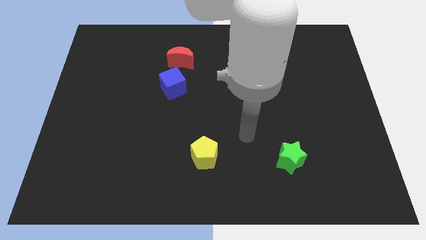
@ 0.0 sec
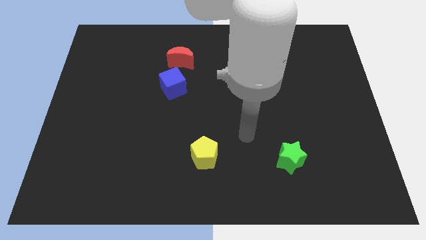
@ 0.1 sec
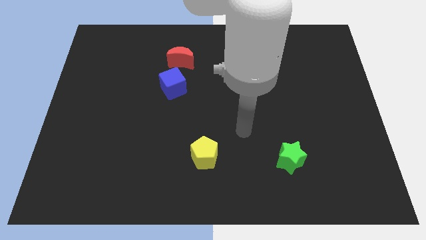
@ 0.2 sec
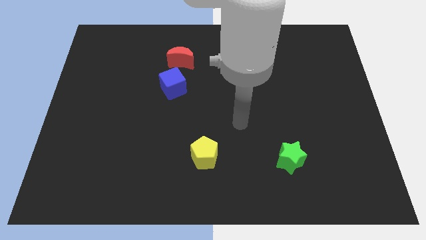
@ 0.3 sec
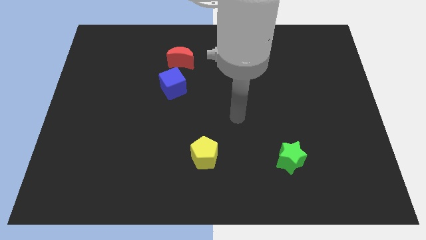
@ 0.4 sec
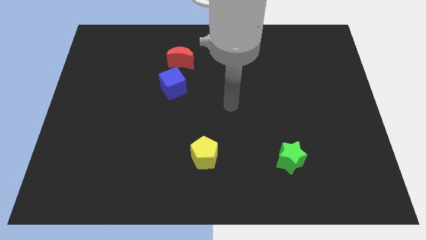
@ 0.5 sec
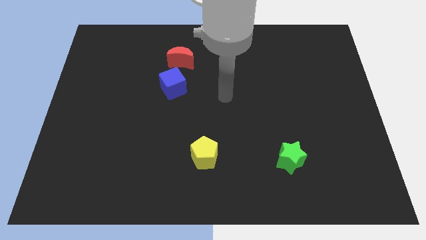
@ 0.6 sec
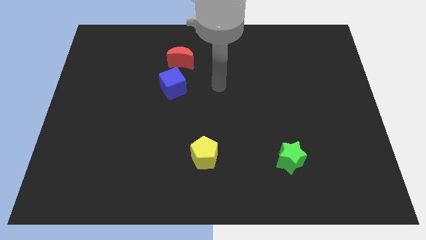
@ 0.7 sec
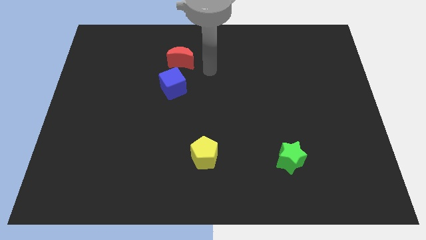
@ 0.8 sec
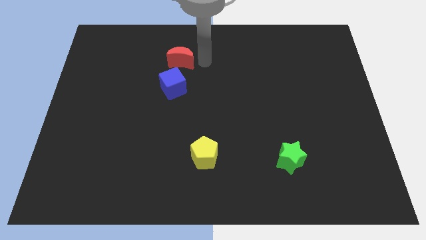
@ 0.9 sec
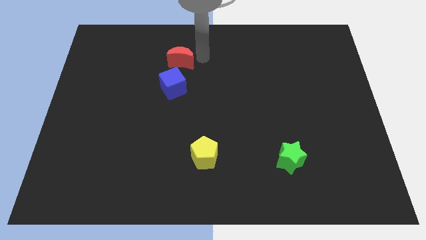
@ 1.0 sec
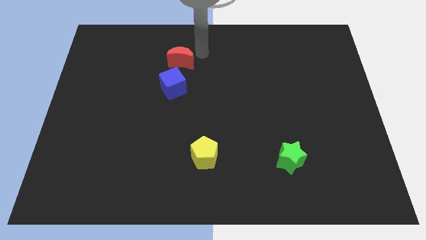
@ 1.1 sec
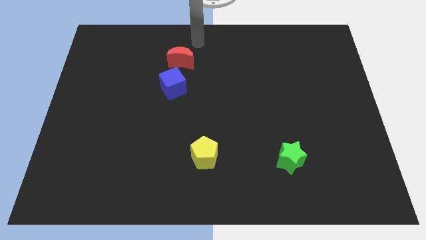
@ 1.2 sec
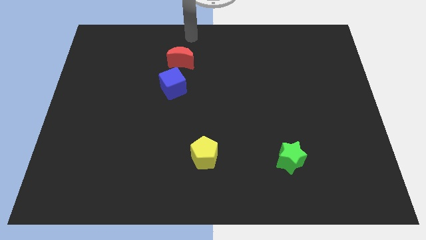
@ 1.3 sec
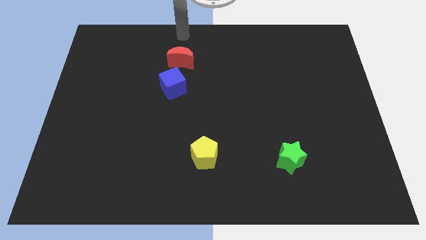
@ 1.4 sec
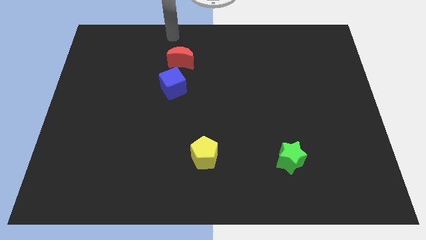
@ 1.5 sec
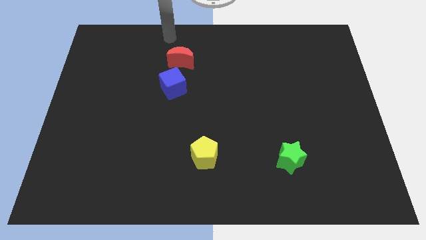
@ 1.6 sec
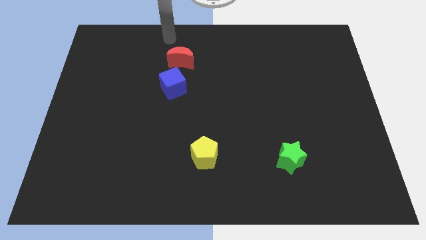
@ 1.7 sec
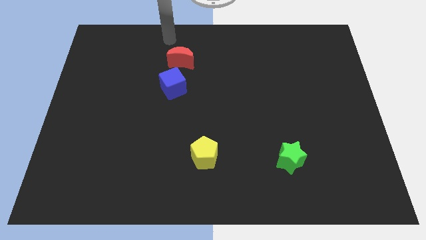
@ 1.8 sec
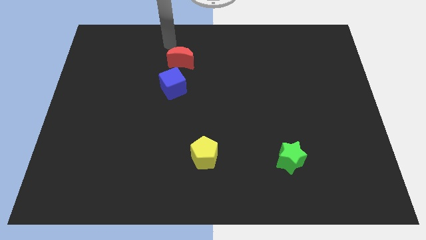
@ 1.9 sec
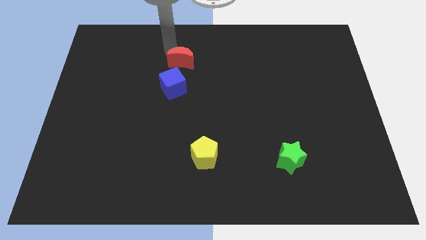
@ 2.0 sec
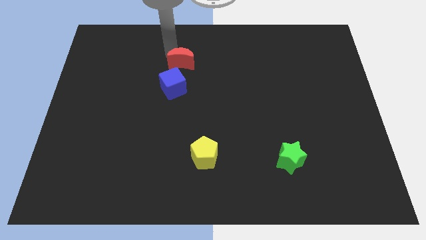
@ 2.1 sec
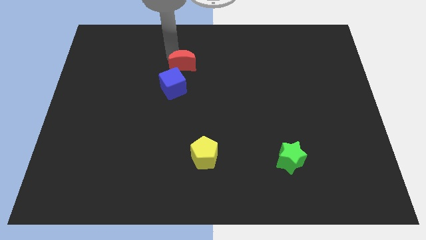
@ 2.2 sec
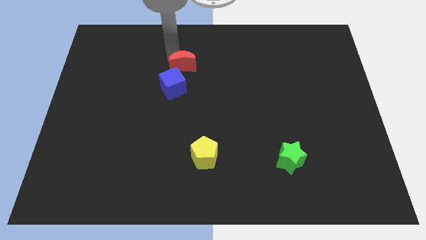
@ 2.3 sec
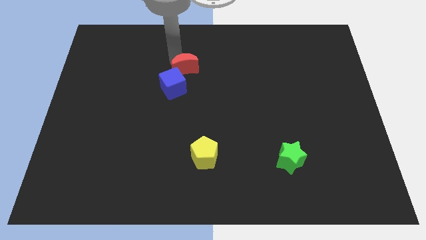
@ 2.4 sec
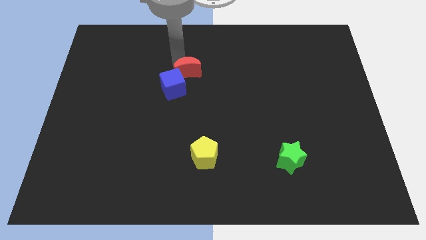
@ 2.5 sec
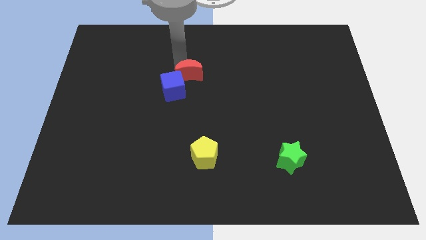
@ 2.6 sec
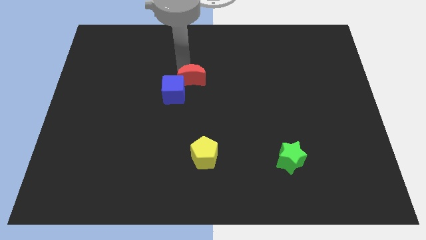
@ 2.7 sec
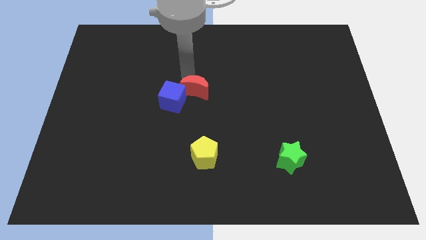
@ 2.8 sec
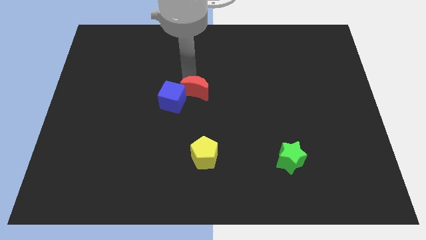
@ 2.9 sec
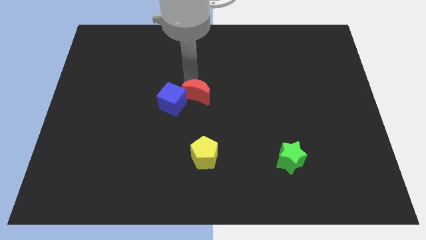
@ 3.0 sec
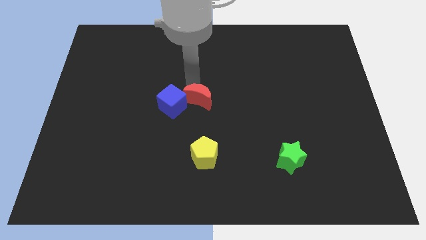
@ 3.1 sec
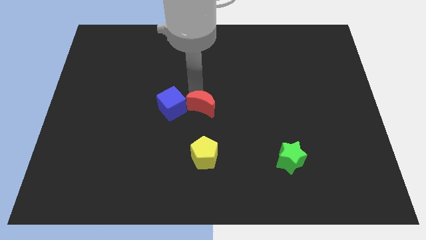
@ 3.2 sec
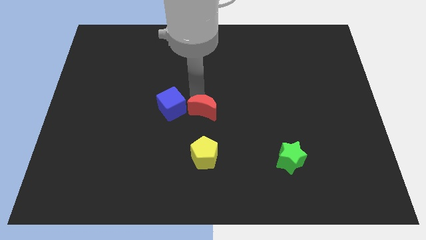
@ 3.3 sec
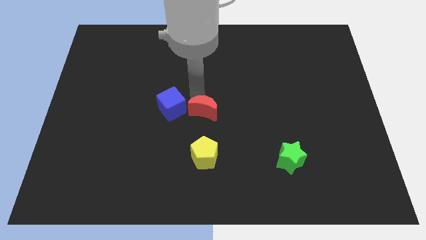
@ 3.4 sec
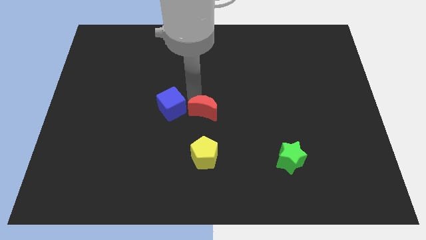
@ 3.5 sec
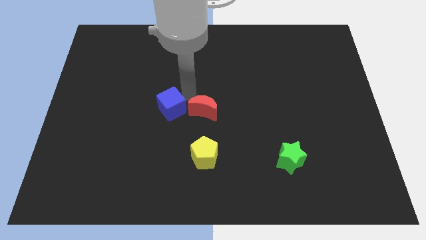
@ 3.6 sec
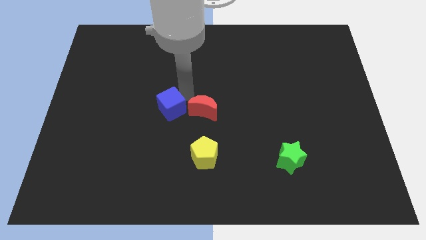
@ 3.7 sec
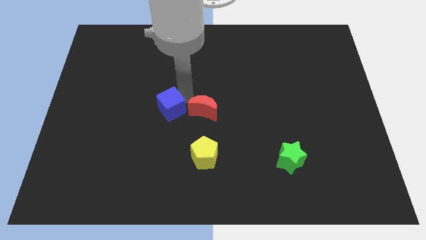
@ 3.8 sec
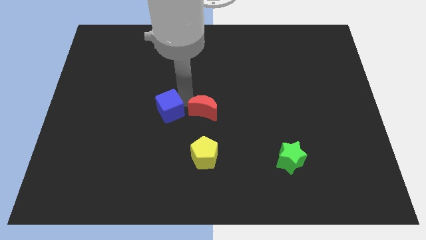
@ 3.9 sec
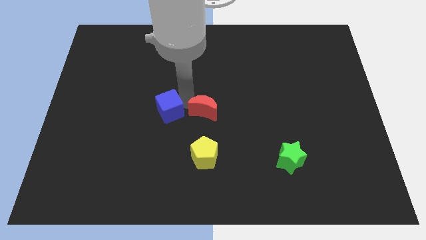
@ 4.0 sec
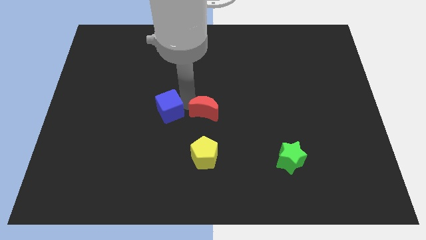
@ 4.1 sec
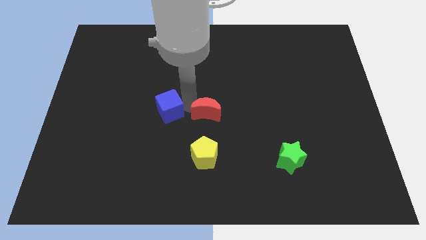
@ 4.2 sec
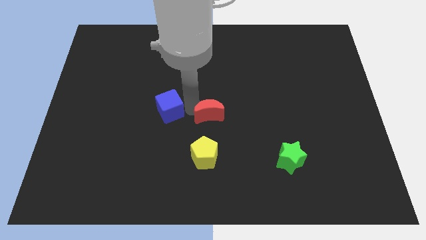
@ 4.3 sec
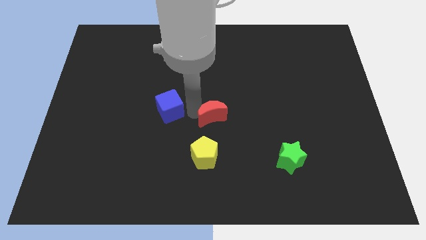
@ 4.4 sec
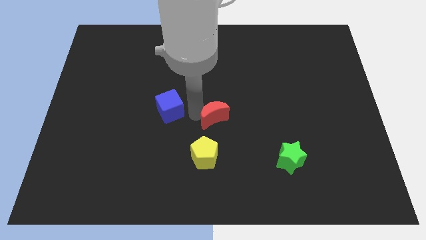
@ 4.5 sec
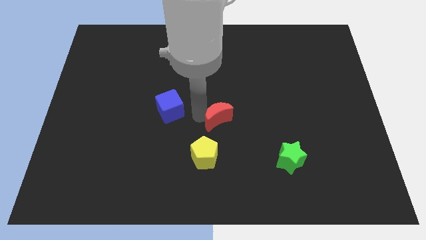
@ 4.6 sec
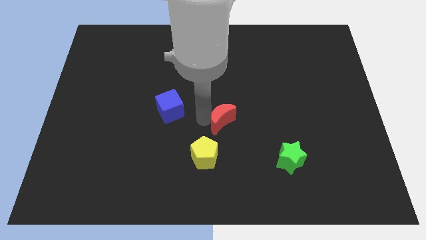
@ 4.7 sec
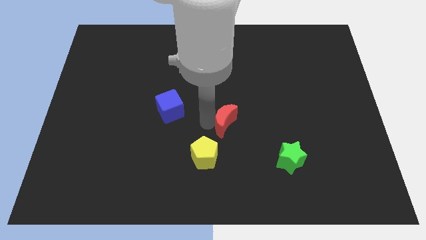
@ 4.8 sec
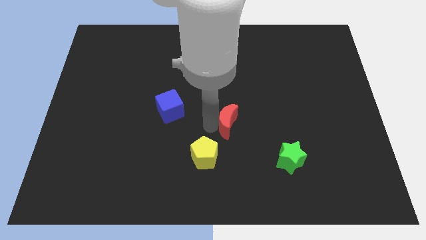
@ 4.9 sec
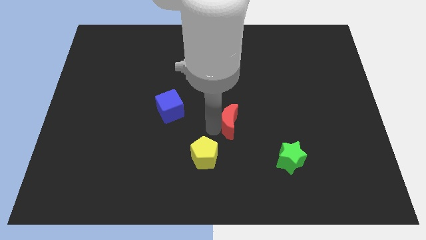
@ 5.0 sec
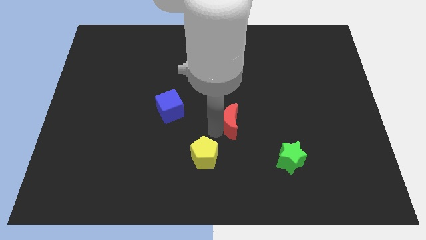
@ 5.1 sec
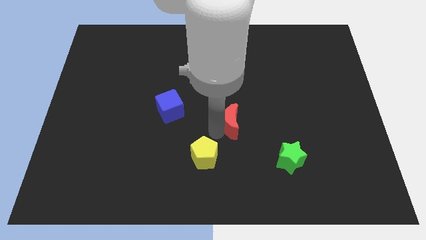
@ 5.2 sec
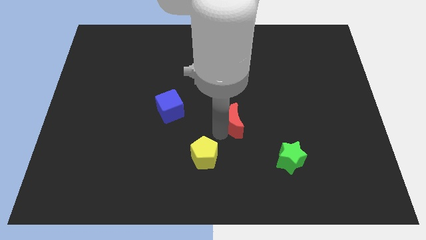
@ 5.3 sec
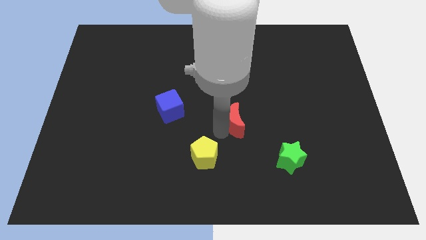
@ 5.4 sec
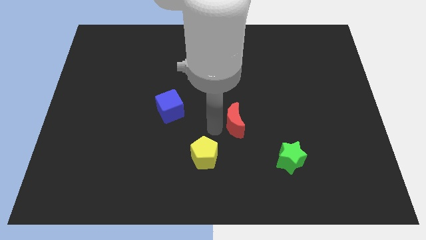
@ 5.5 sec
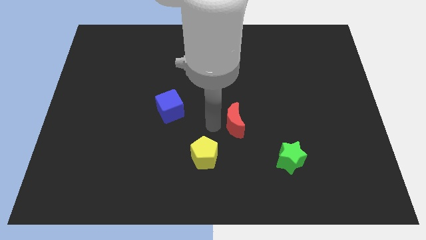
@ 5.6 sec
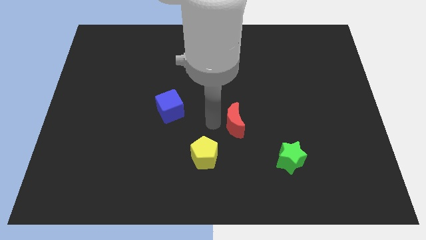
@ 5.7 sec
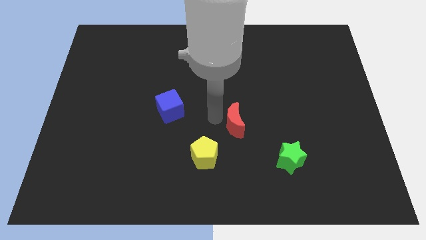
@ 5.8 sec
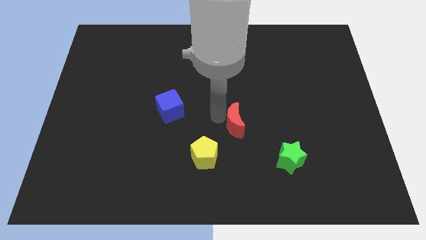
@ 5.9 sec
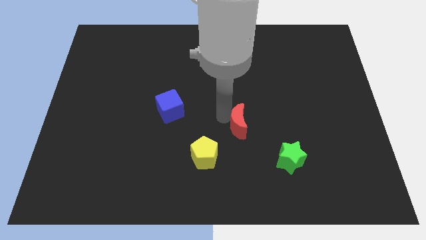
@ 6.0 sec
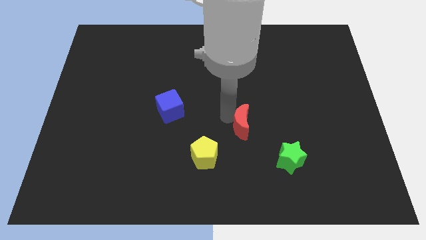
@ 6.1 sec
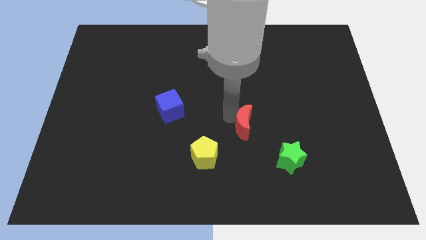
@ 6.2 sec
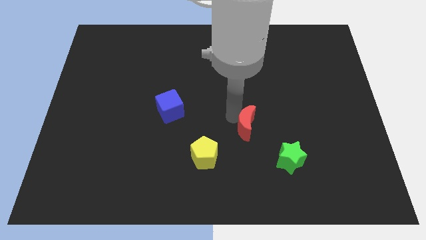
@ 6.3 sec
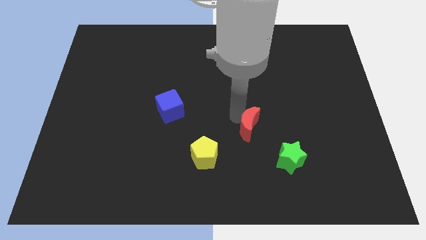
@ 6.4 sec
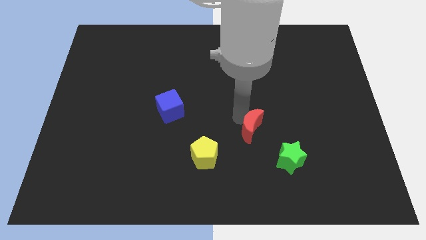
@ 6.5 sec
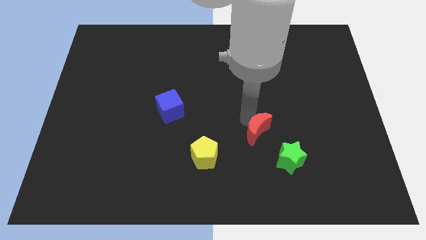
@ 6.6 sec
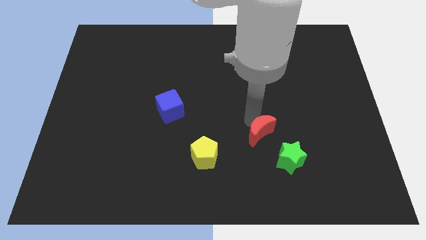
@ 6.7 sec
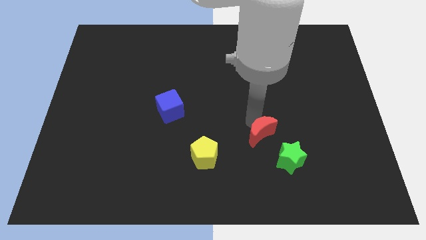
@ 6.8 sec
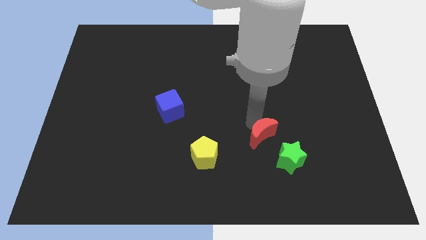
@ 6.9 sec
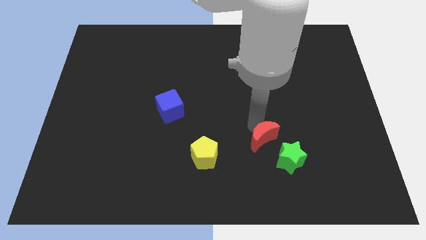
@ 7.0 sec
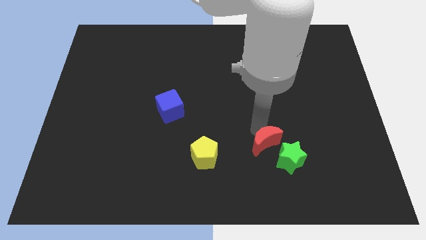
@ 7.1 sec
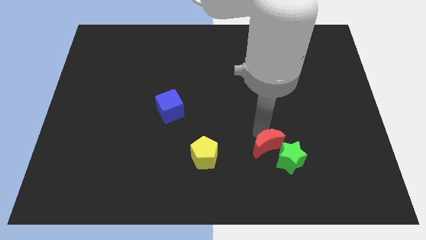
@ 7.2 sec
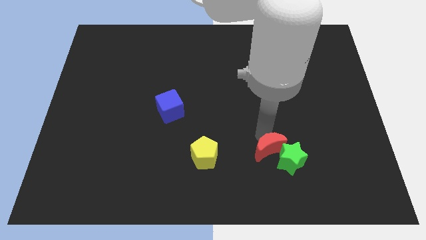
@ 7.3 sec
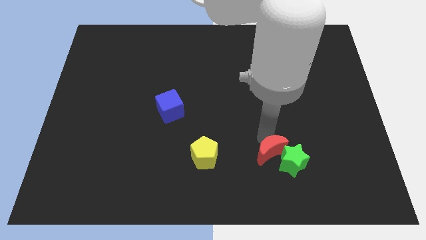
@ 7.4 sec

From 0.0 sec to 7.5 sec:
put the red moon close to the green block

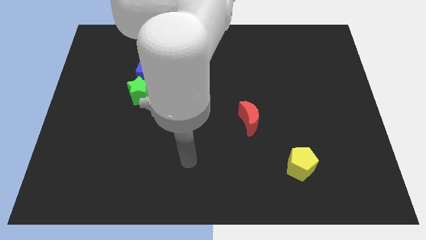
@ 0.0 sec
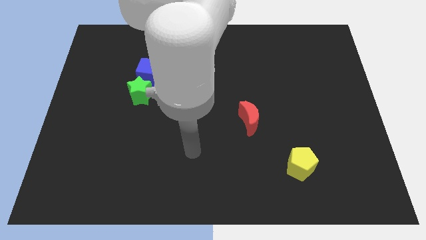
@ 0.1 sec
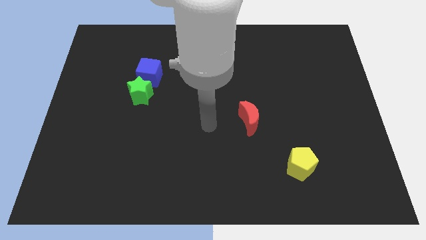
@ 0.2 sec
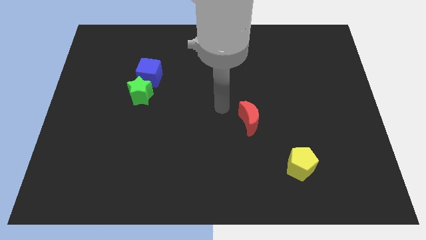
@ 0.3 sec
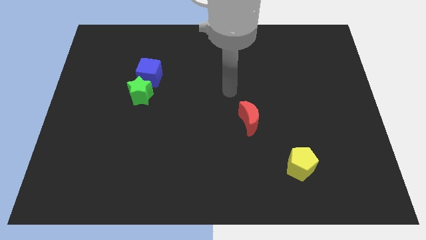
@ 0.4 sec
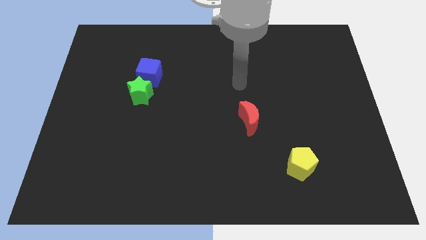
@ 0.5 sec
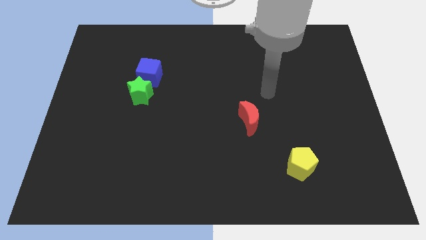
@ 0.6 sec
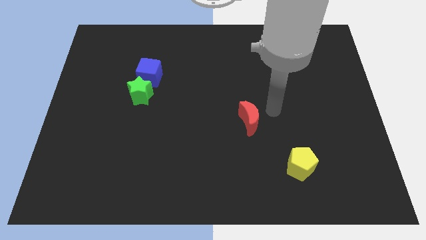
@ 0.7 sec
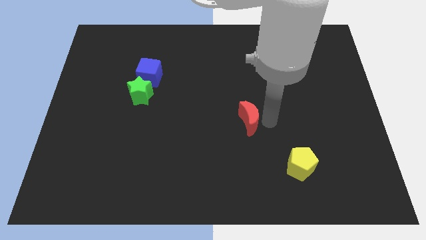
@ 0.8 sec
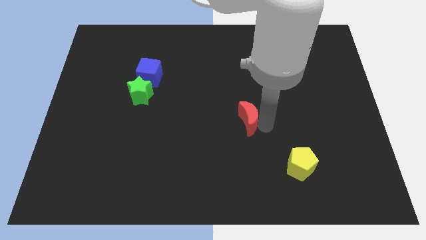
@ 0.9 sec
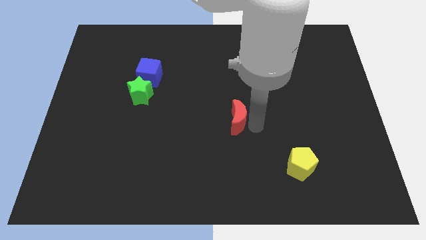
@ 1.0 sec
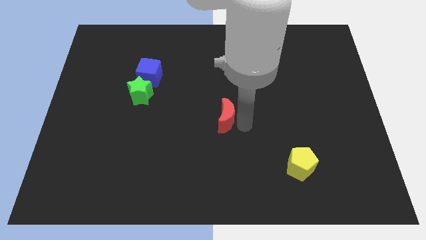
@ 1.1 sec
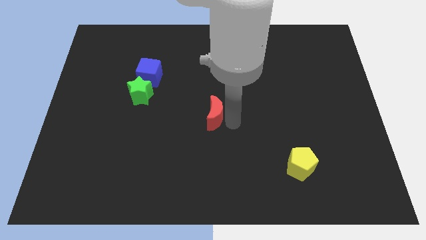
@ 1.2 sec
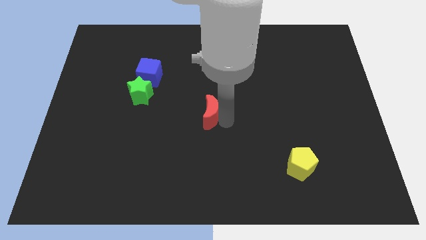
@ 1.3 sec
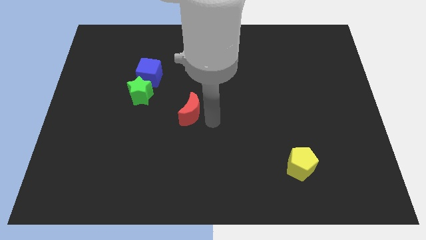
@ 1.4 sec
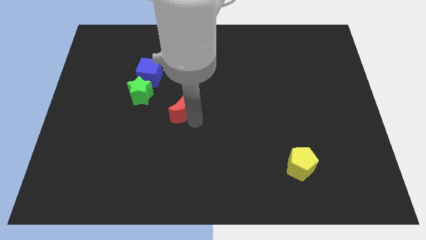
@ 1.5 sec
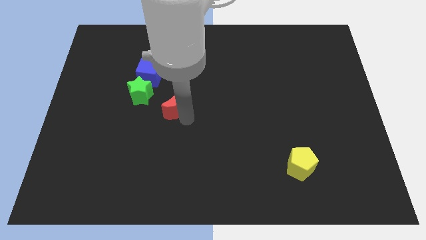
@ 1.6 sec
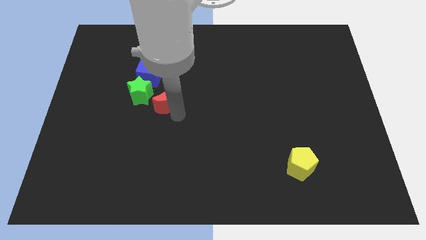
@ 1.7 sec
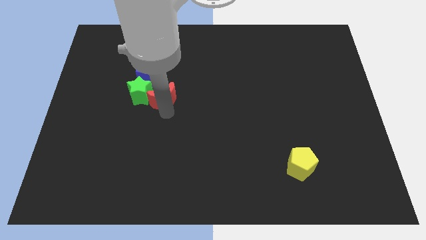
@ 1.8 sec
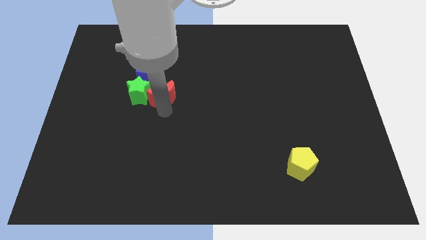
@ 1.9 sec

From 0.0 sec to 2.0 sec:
put the red moon next to the green star
